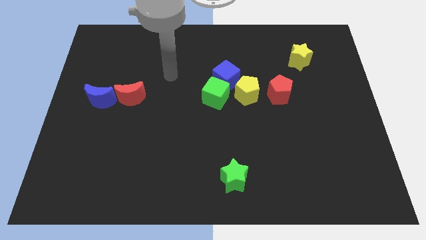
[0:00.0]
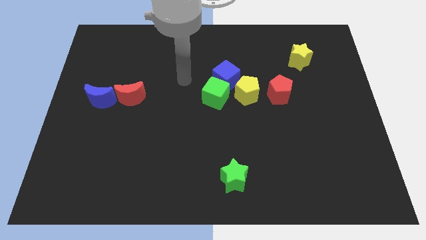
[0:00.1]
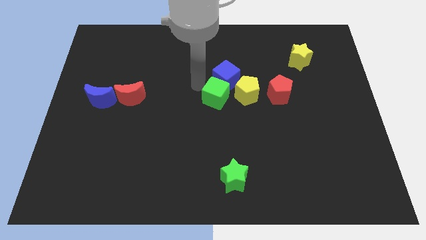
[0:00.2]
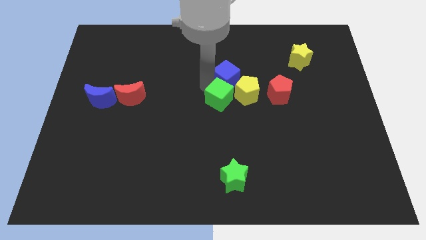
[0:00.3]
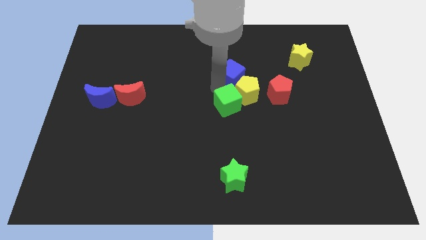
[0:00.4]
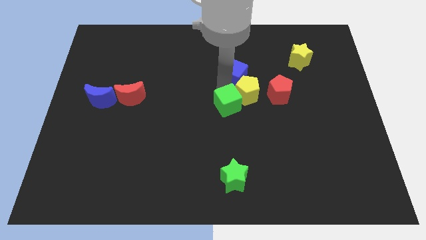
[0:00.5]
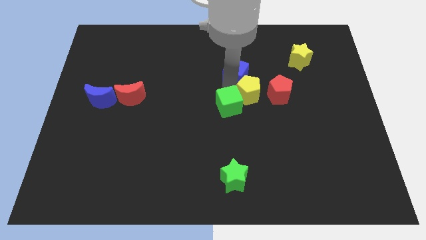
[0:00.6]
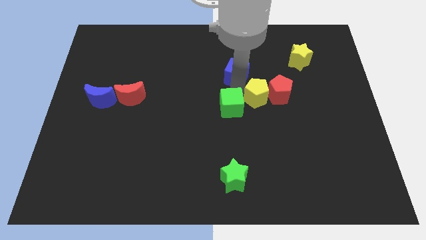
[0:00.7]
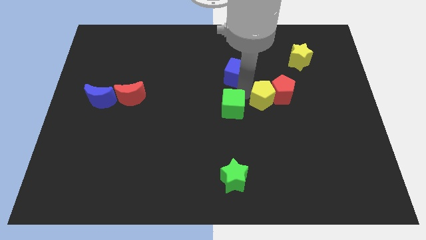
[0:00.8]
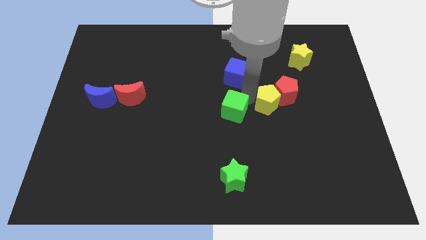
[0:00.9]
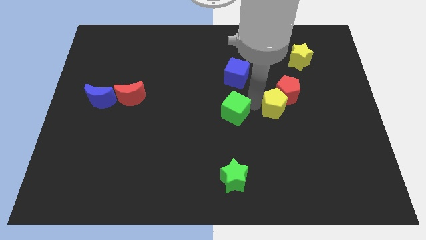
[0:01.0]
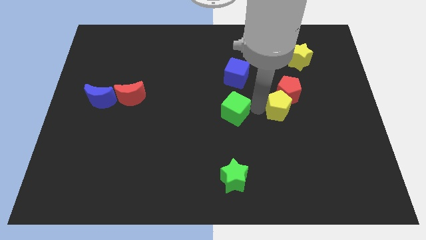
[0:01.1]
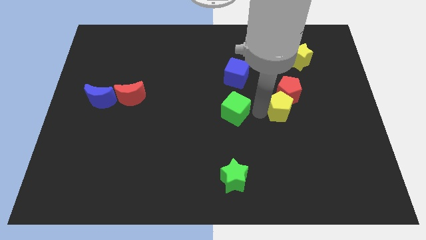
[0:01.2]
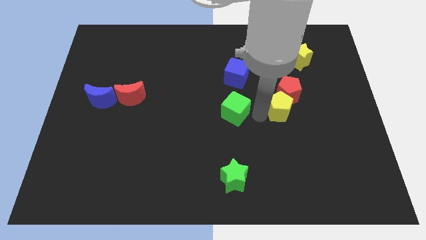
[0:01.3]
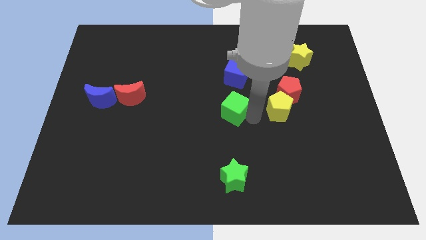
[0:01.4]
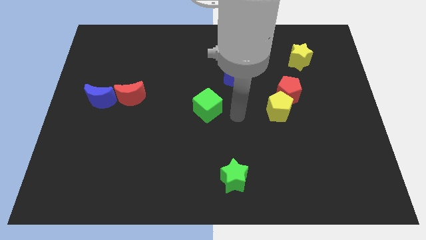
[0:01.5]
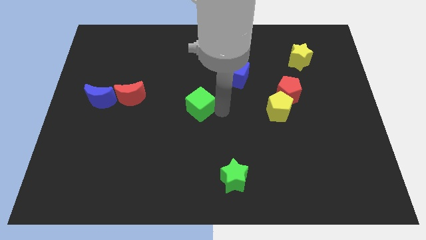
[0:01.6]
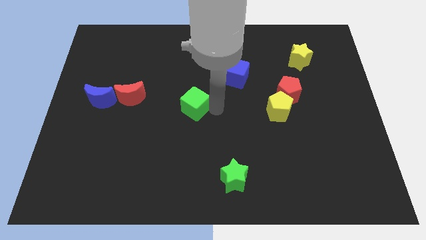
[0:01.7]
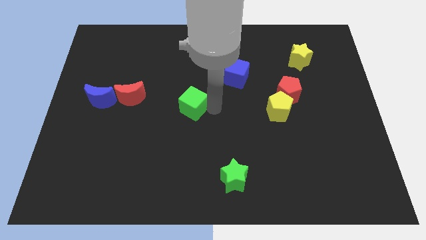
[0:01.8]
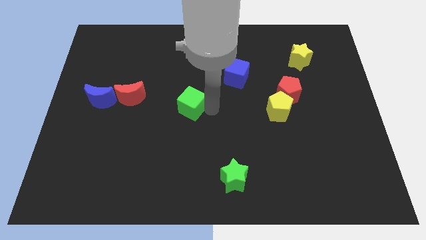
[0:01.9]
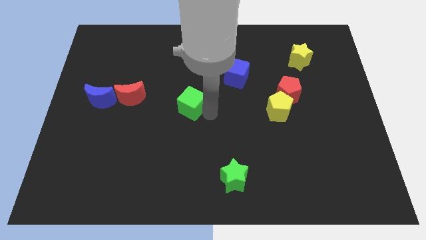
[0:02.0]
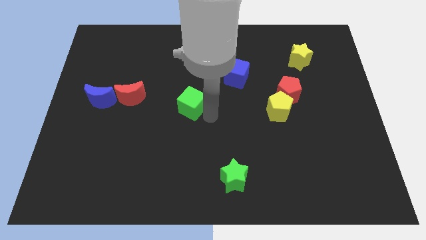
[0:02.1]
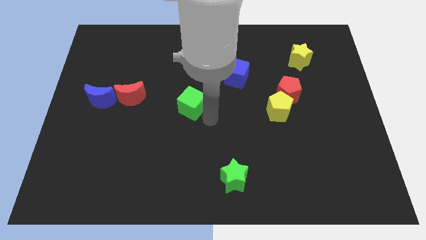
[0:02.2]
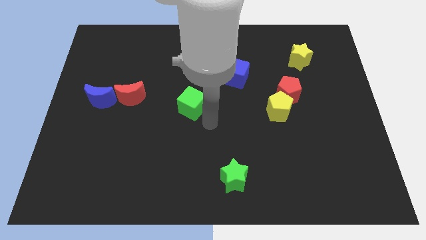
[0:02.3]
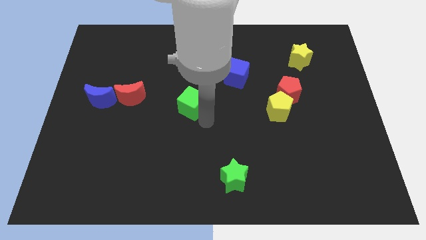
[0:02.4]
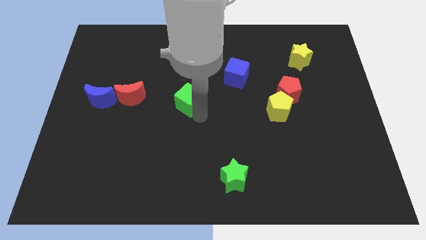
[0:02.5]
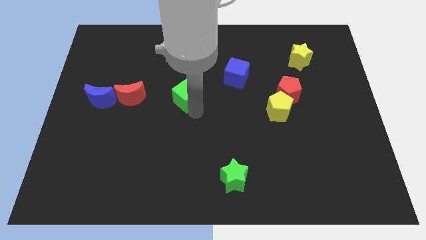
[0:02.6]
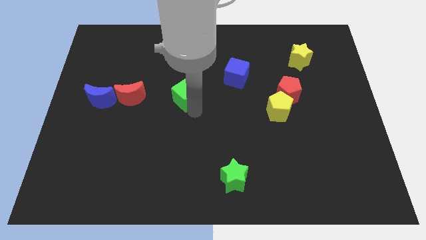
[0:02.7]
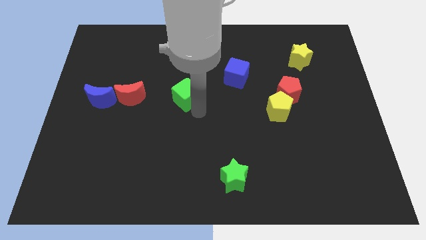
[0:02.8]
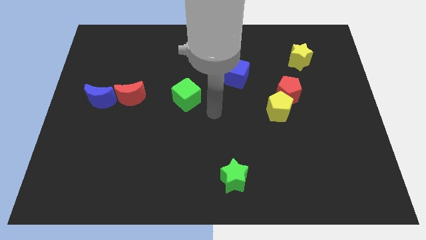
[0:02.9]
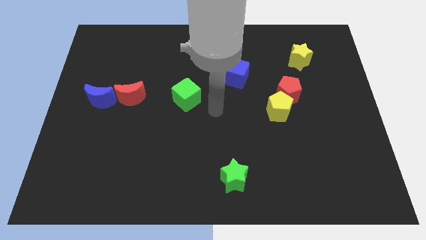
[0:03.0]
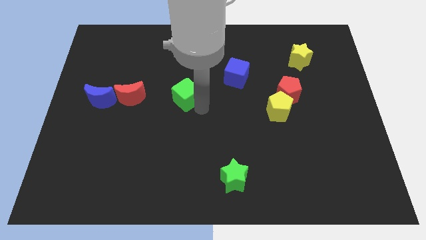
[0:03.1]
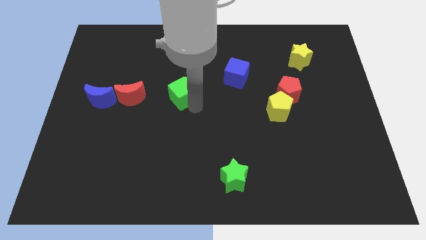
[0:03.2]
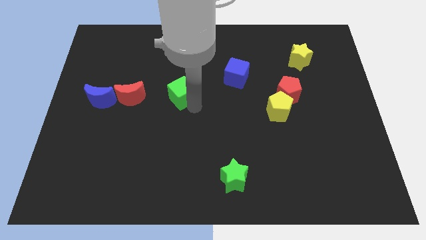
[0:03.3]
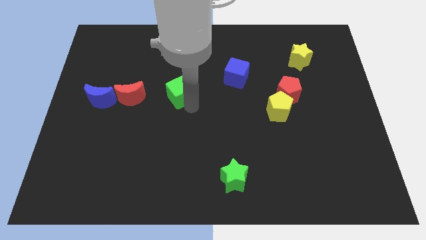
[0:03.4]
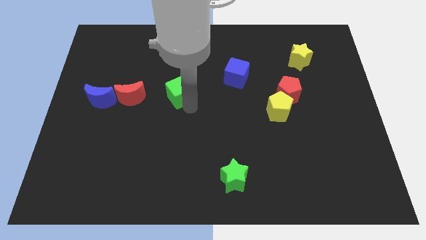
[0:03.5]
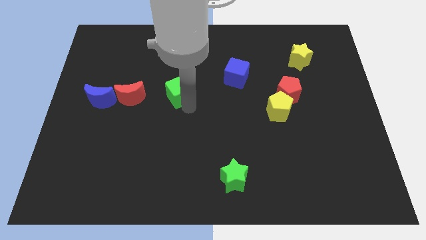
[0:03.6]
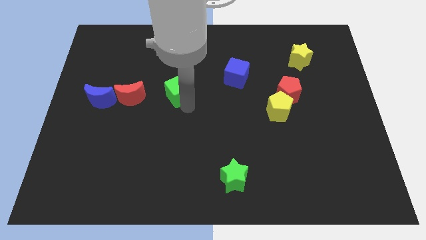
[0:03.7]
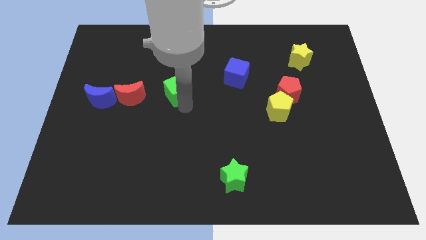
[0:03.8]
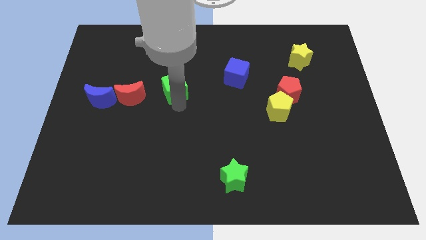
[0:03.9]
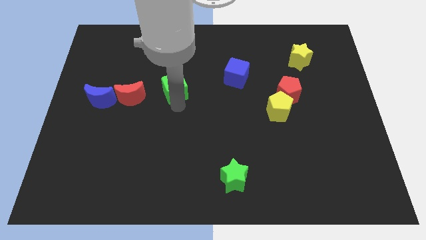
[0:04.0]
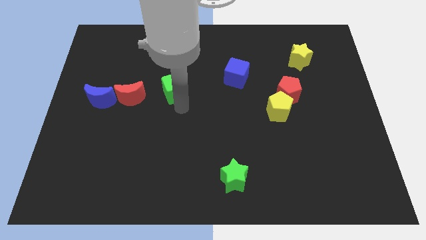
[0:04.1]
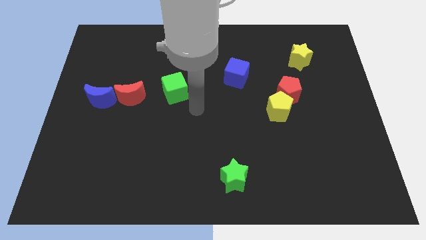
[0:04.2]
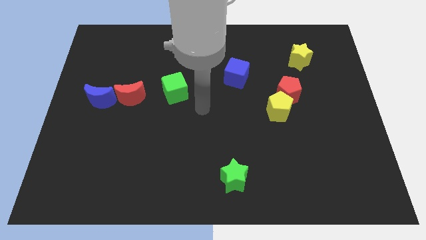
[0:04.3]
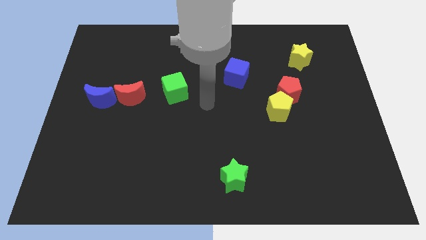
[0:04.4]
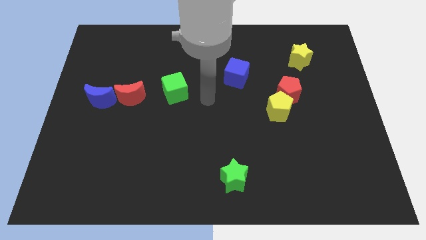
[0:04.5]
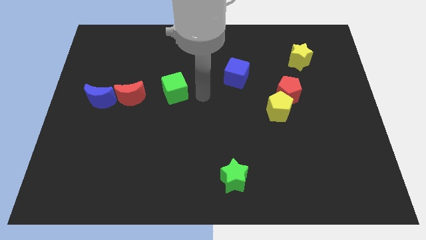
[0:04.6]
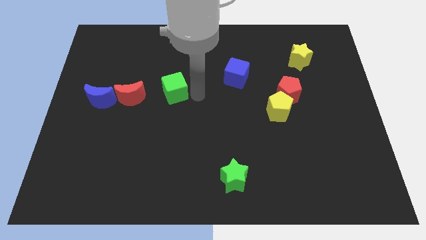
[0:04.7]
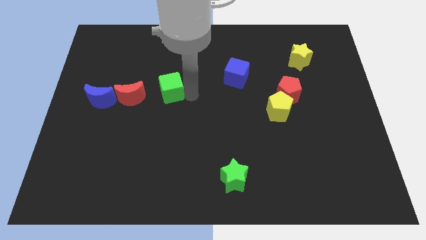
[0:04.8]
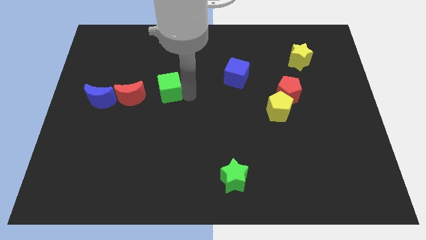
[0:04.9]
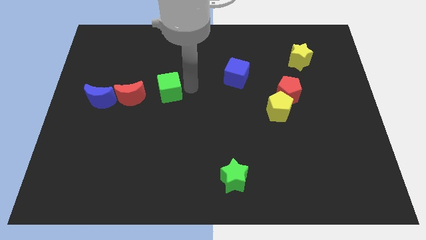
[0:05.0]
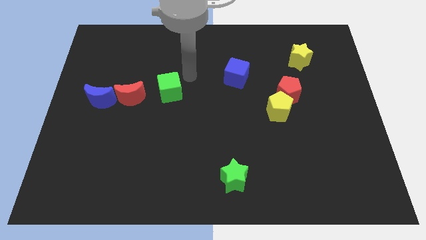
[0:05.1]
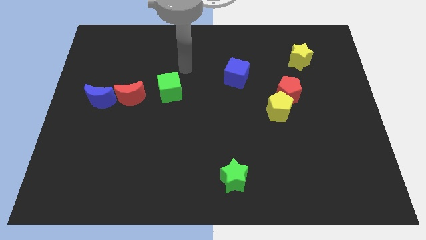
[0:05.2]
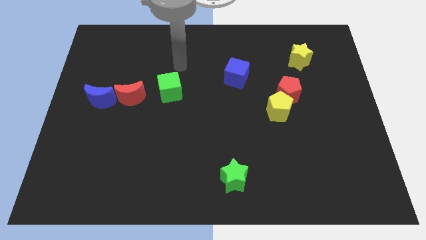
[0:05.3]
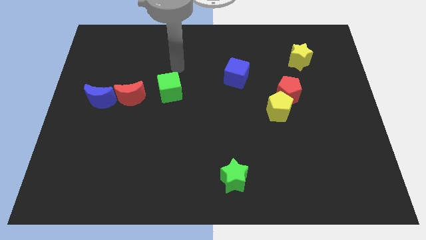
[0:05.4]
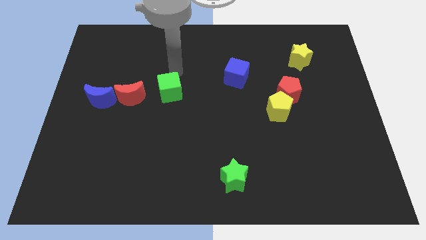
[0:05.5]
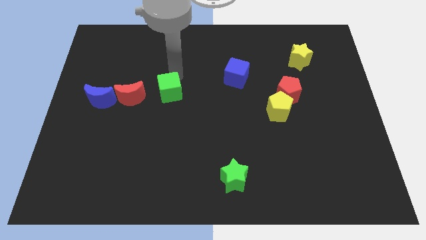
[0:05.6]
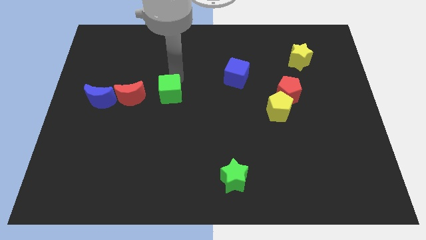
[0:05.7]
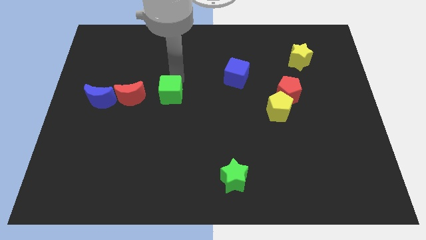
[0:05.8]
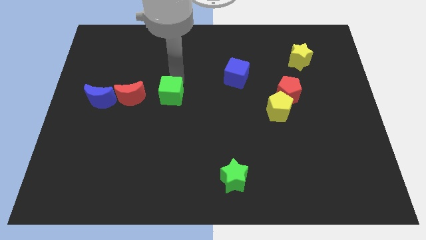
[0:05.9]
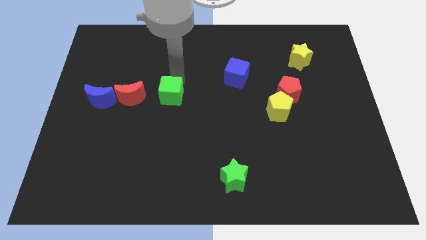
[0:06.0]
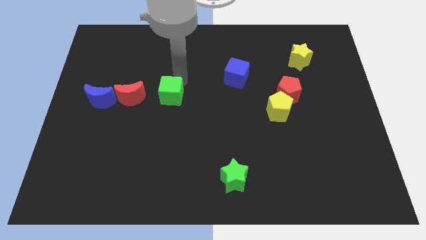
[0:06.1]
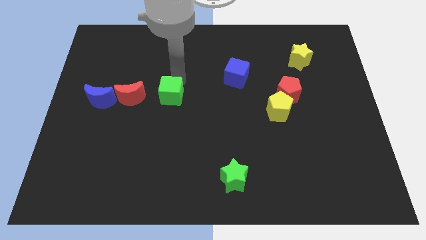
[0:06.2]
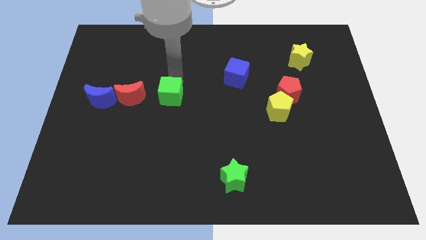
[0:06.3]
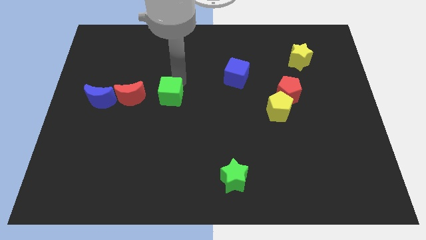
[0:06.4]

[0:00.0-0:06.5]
place the green cube to the right of the red crescent

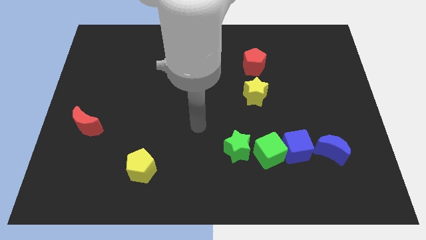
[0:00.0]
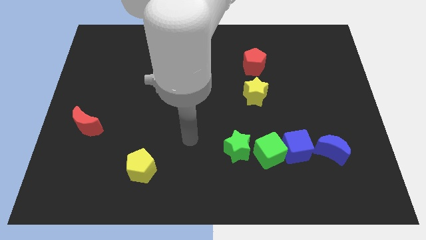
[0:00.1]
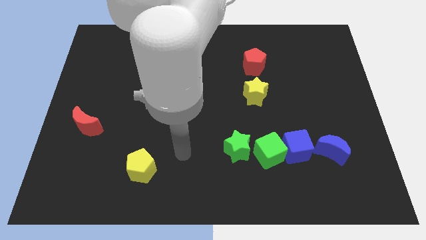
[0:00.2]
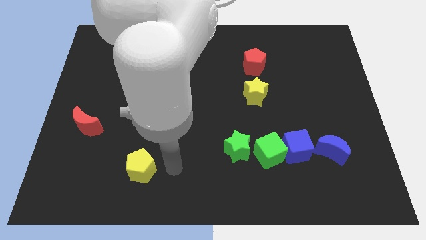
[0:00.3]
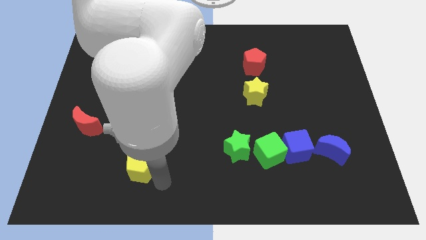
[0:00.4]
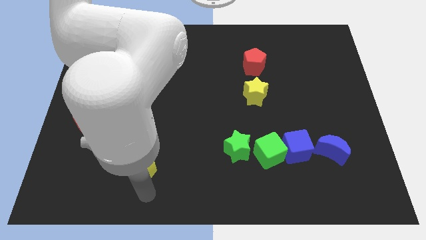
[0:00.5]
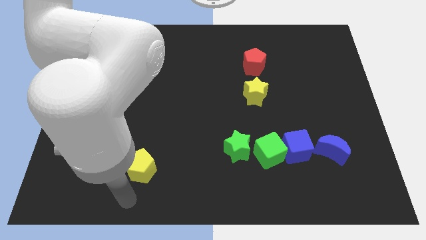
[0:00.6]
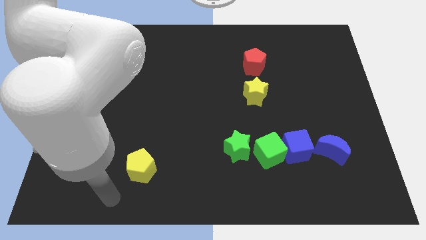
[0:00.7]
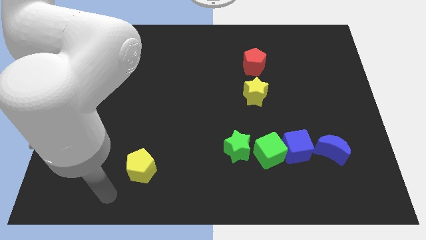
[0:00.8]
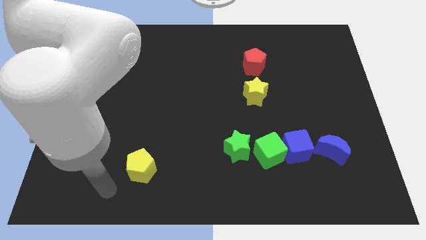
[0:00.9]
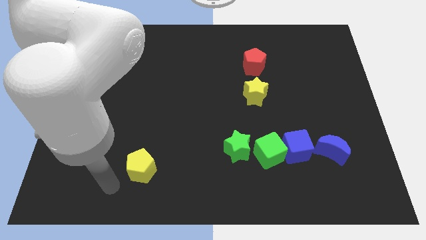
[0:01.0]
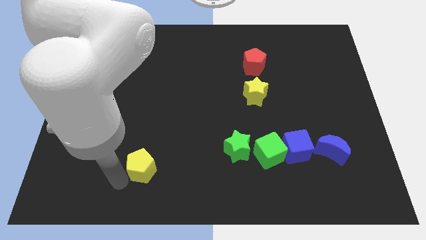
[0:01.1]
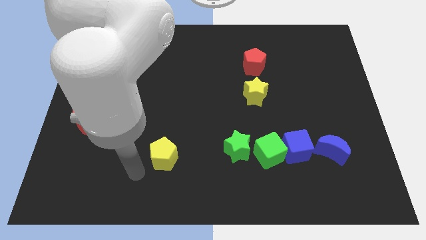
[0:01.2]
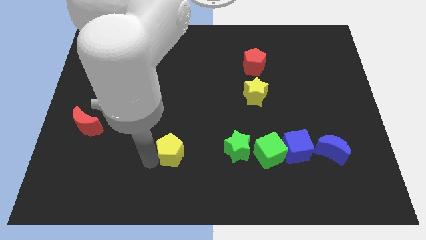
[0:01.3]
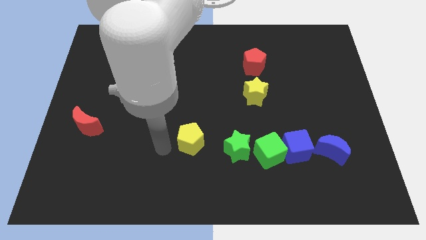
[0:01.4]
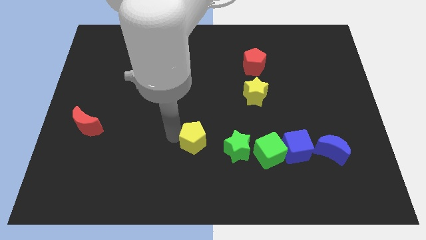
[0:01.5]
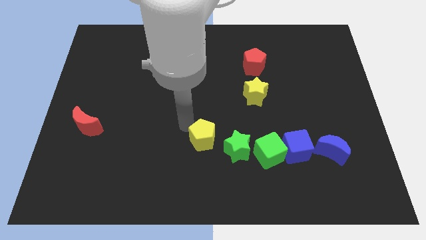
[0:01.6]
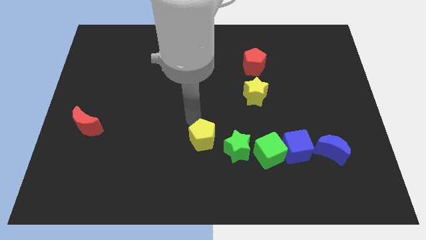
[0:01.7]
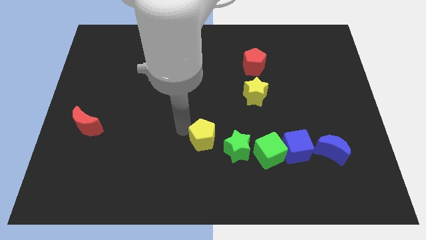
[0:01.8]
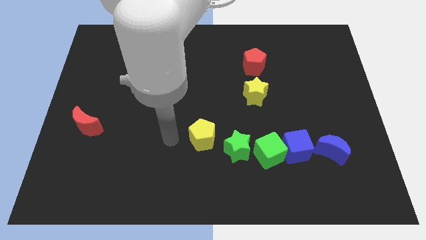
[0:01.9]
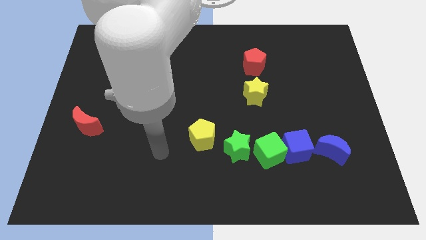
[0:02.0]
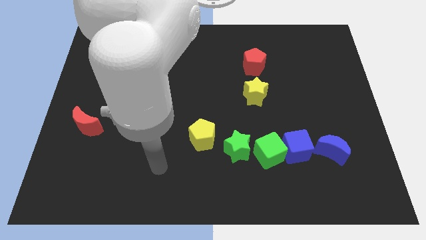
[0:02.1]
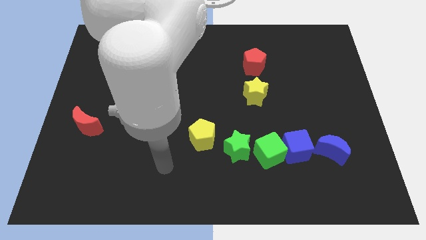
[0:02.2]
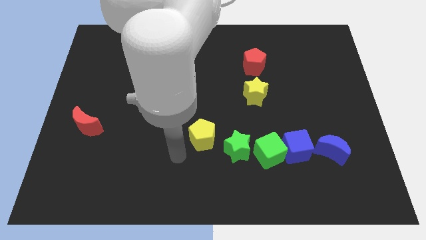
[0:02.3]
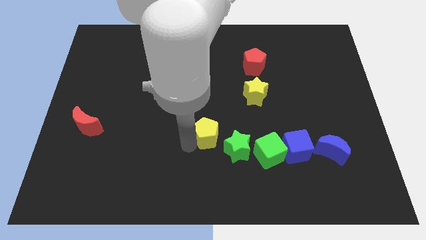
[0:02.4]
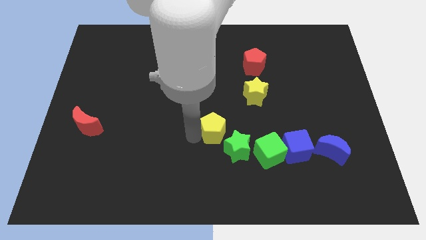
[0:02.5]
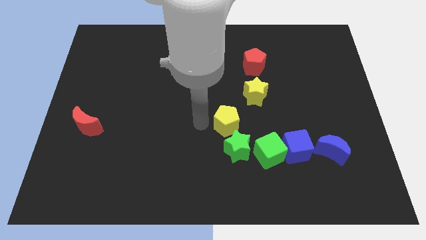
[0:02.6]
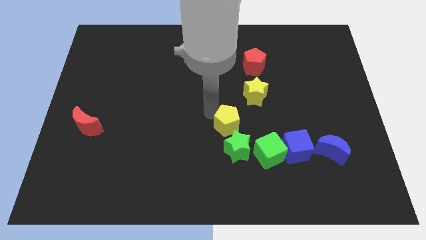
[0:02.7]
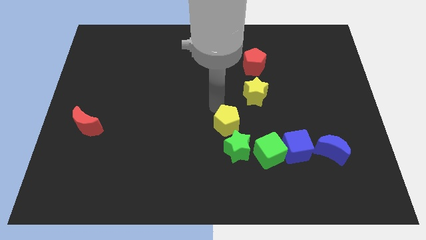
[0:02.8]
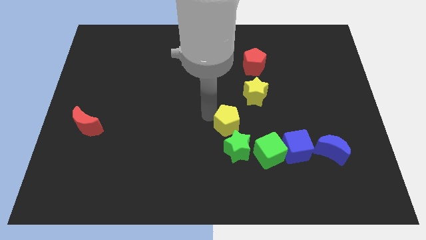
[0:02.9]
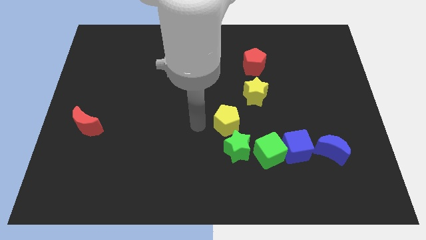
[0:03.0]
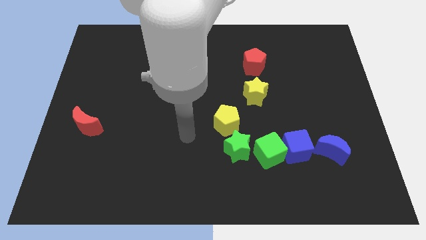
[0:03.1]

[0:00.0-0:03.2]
slide the yellow pentagon diagonally top left to the green star
